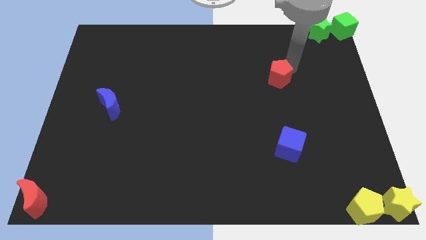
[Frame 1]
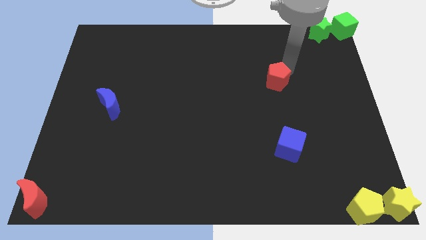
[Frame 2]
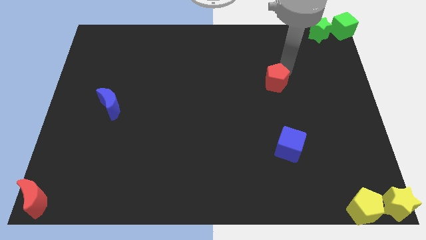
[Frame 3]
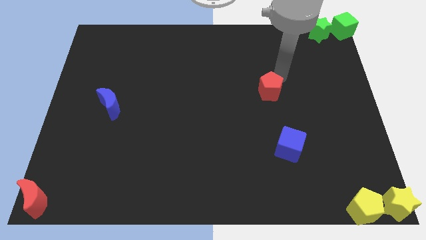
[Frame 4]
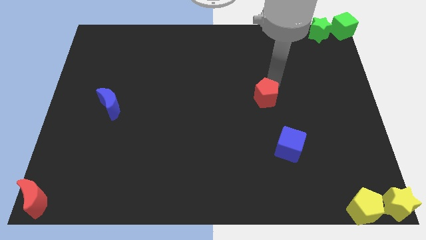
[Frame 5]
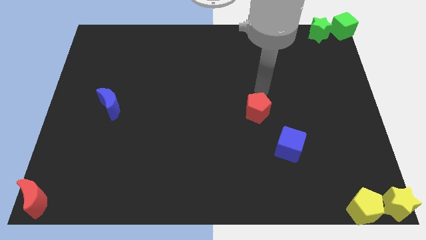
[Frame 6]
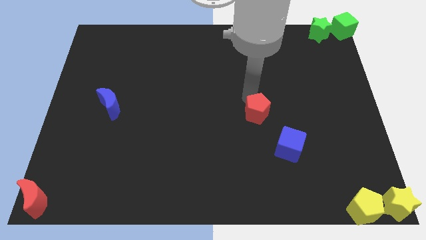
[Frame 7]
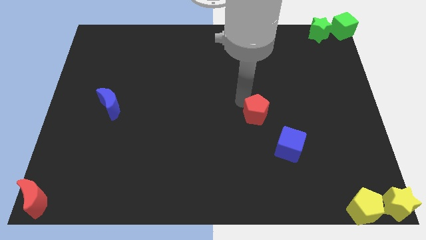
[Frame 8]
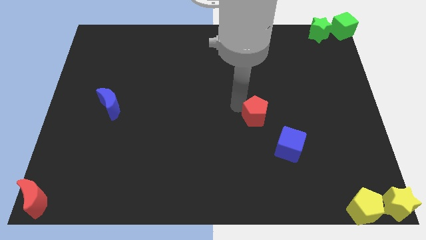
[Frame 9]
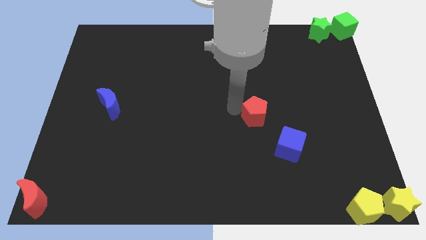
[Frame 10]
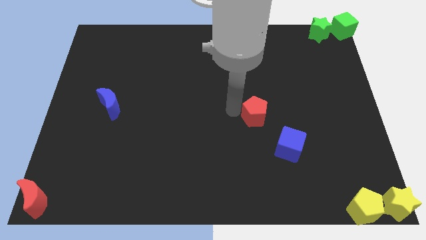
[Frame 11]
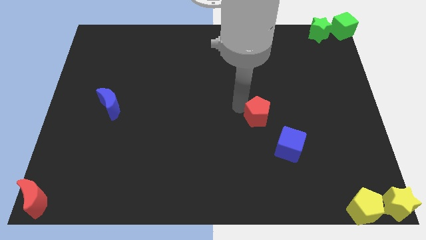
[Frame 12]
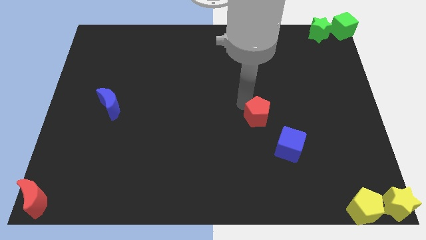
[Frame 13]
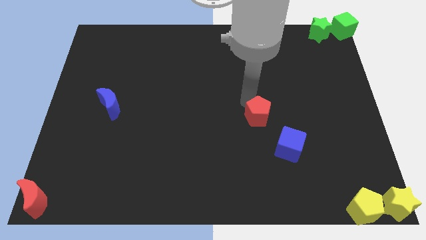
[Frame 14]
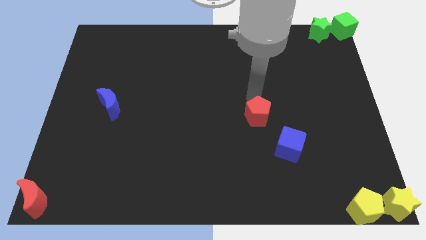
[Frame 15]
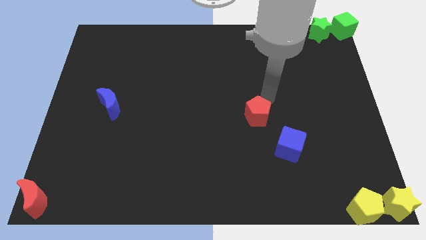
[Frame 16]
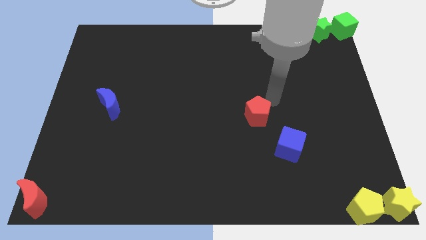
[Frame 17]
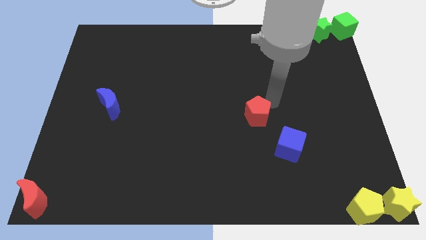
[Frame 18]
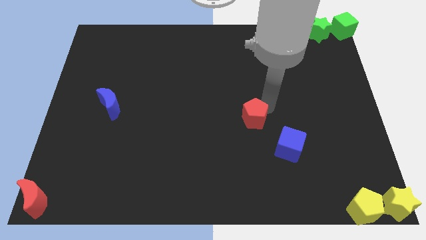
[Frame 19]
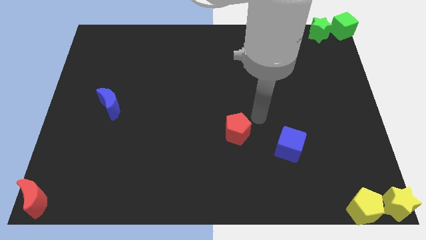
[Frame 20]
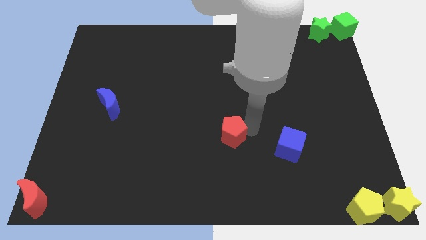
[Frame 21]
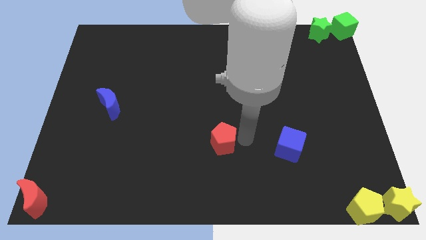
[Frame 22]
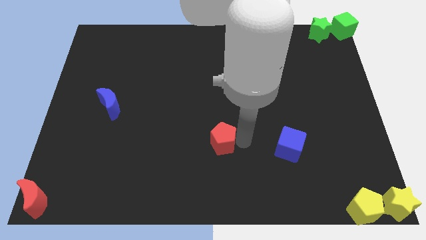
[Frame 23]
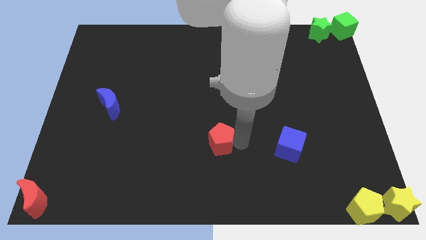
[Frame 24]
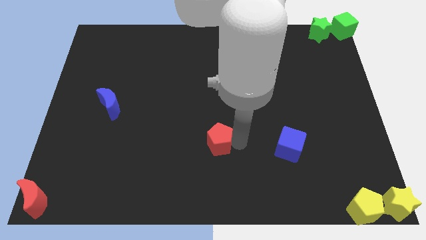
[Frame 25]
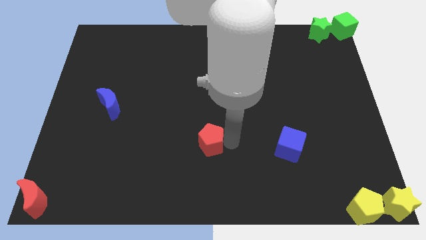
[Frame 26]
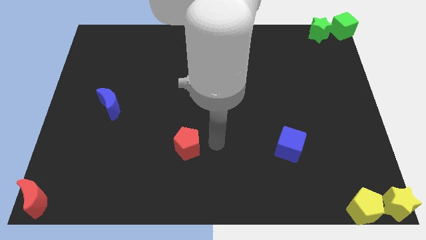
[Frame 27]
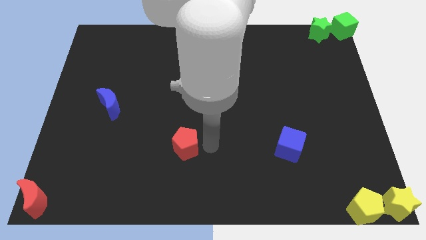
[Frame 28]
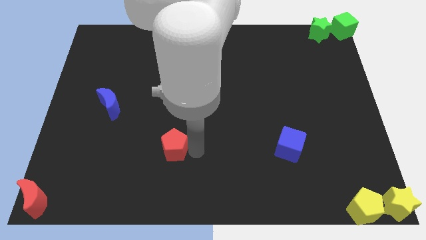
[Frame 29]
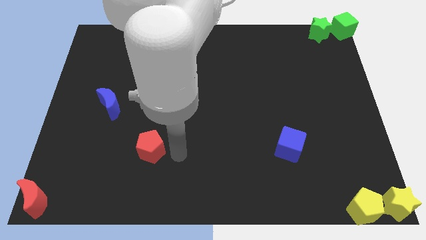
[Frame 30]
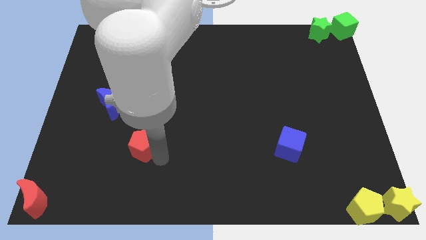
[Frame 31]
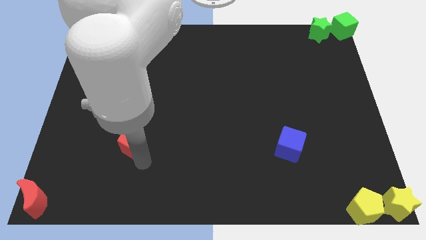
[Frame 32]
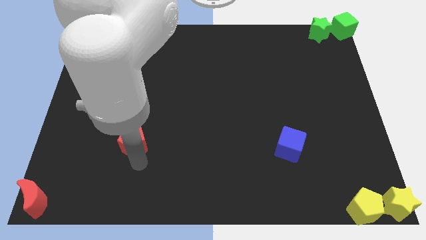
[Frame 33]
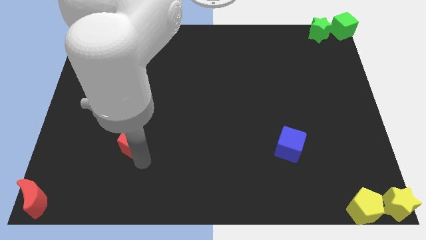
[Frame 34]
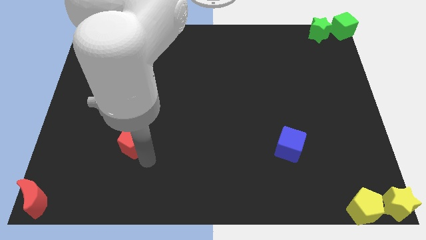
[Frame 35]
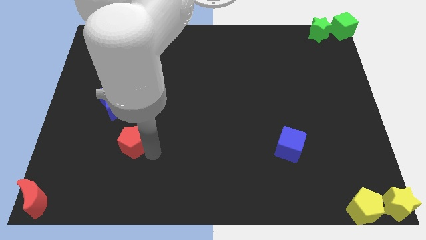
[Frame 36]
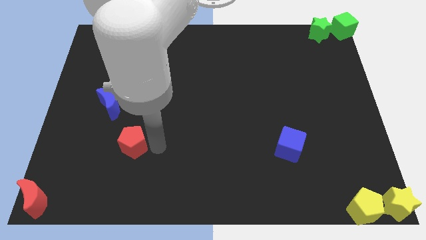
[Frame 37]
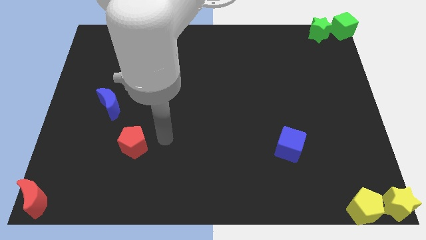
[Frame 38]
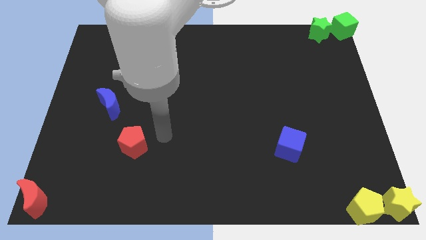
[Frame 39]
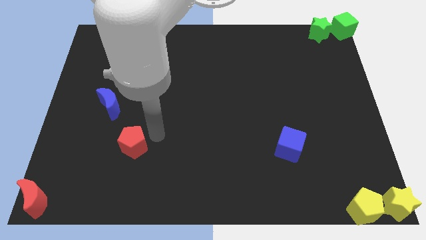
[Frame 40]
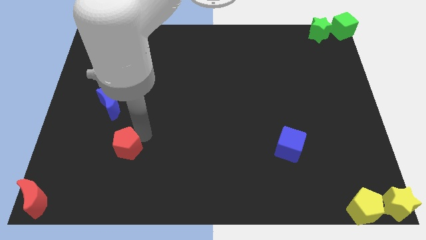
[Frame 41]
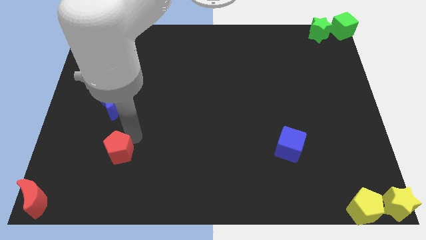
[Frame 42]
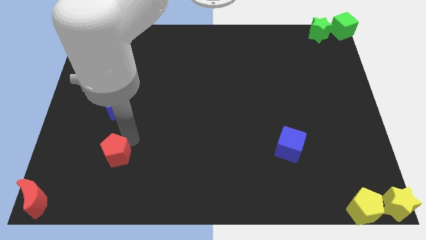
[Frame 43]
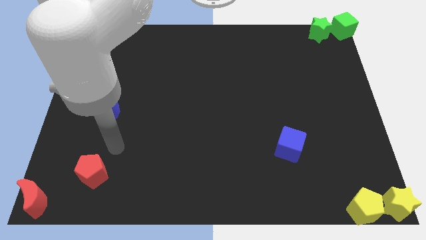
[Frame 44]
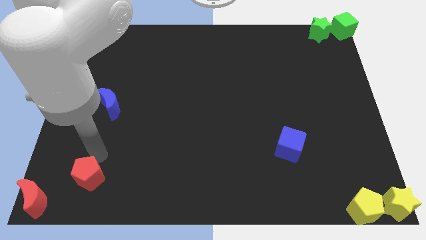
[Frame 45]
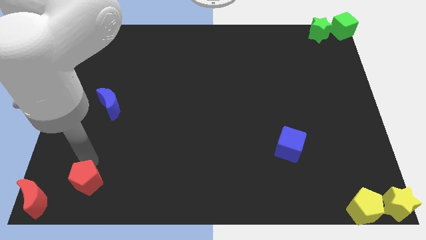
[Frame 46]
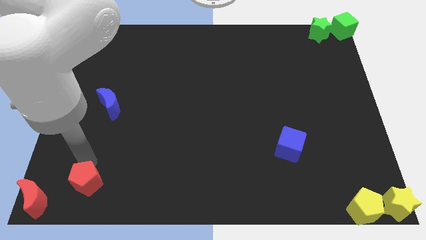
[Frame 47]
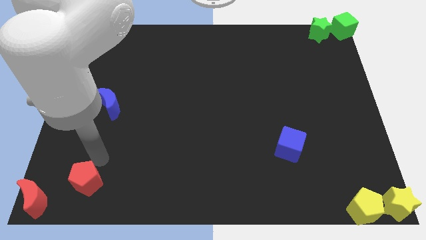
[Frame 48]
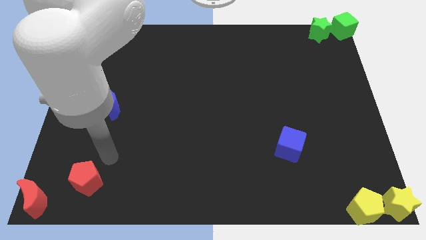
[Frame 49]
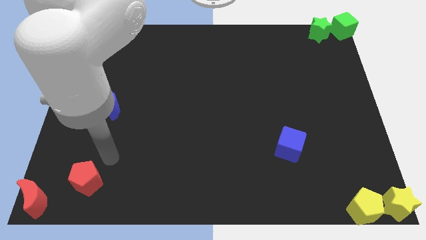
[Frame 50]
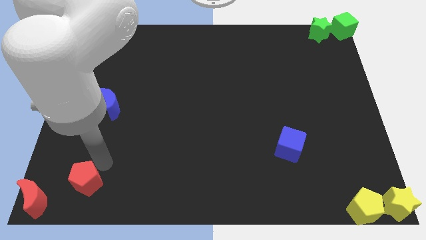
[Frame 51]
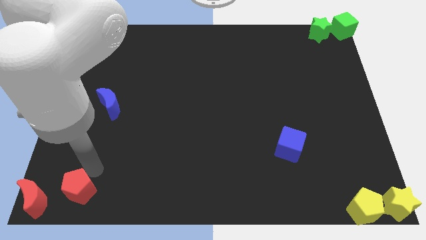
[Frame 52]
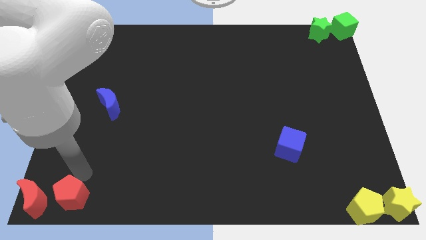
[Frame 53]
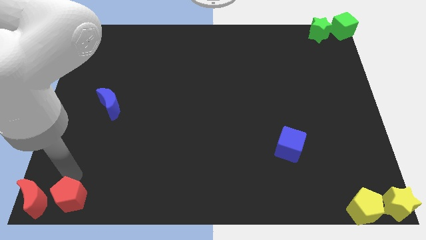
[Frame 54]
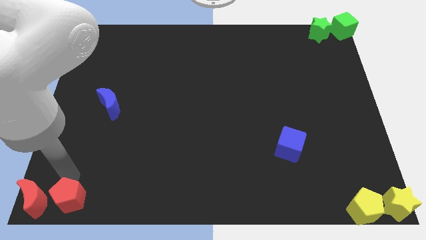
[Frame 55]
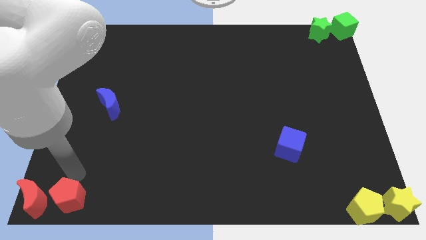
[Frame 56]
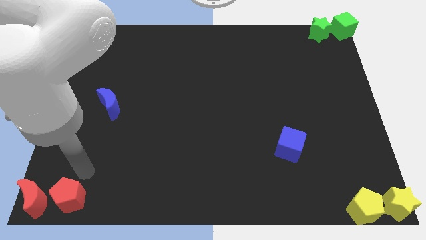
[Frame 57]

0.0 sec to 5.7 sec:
move the red pentagon right to the red crescent

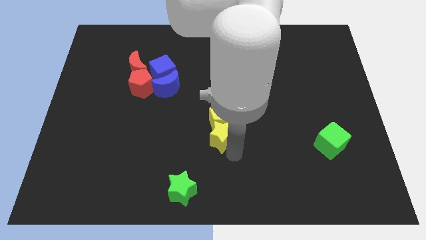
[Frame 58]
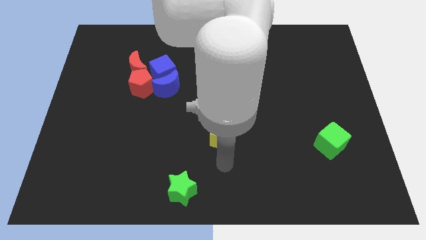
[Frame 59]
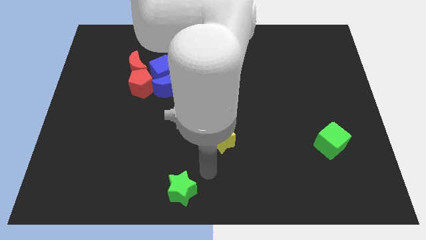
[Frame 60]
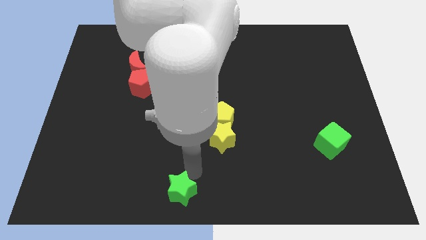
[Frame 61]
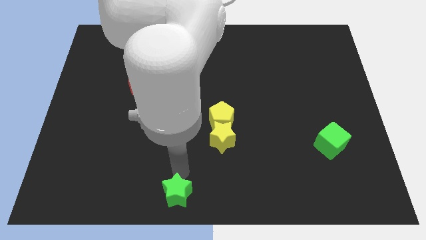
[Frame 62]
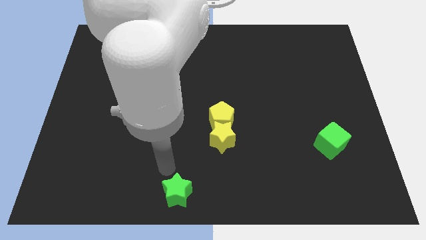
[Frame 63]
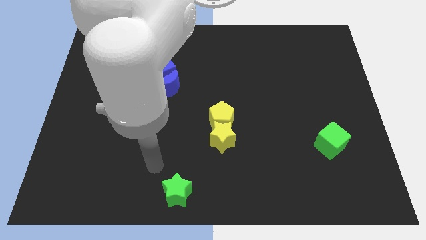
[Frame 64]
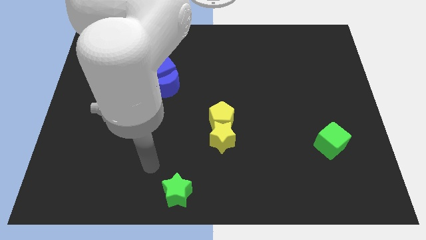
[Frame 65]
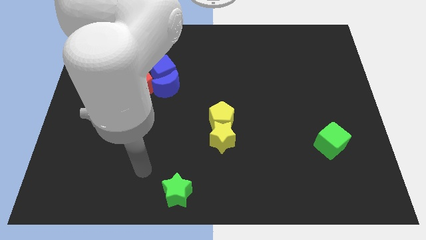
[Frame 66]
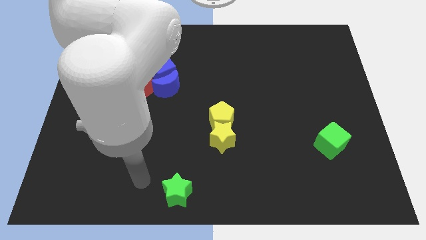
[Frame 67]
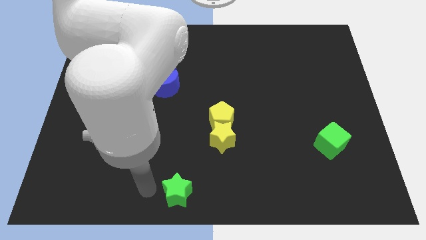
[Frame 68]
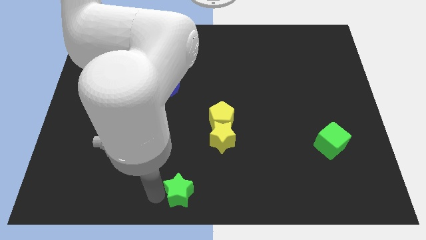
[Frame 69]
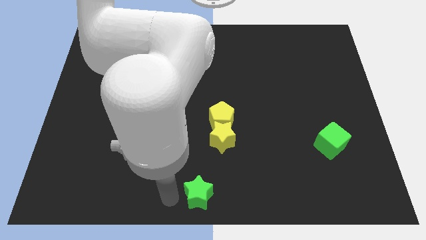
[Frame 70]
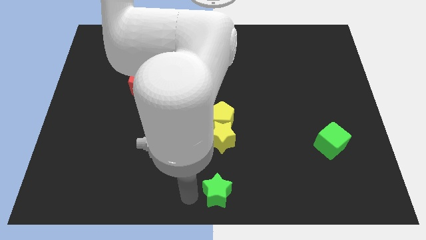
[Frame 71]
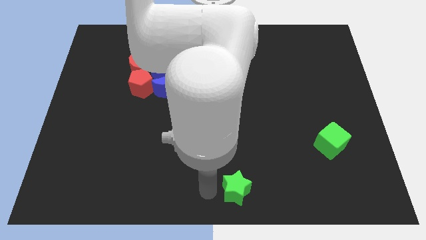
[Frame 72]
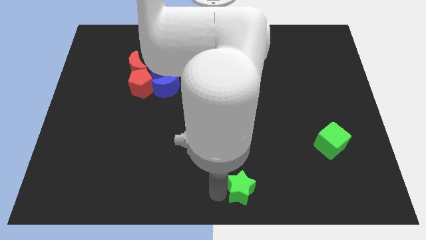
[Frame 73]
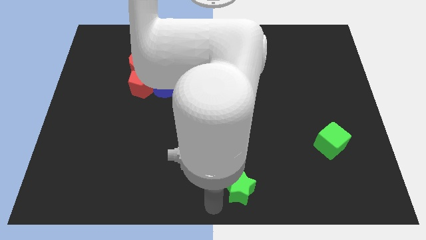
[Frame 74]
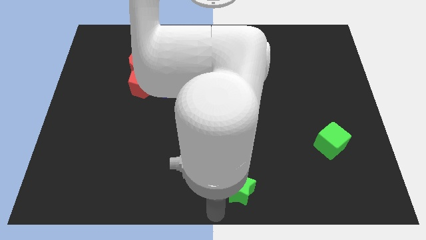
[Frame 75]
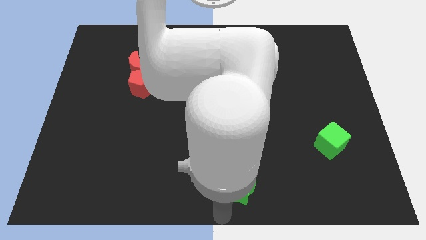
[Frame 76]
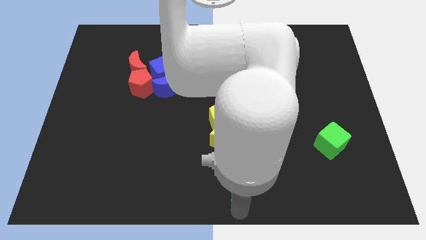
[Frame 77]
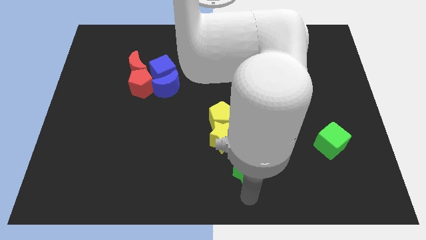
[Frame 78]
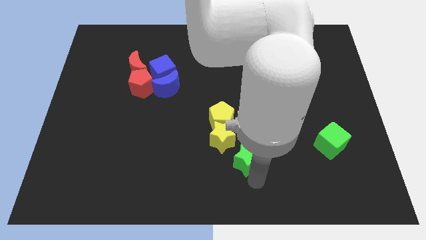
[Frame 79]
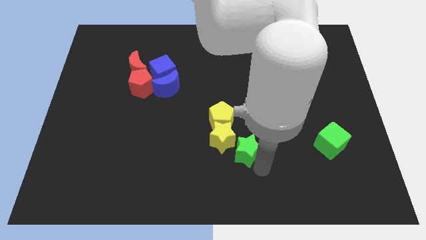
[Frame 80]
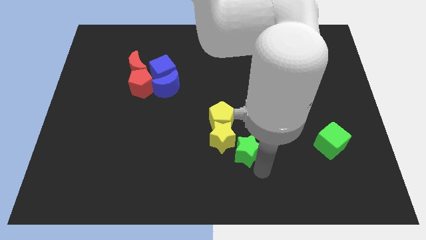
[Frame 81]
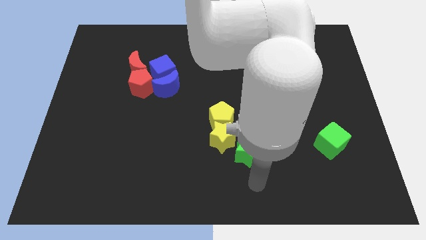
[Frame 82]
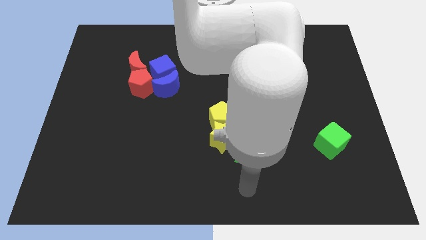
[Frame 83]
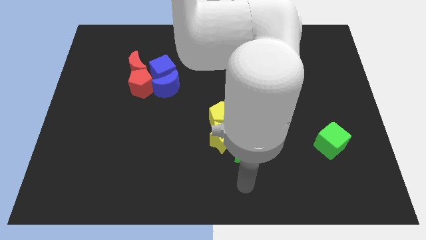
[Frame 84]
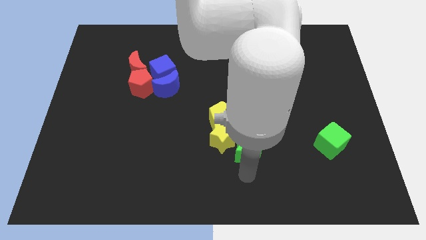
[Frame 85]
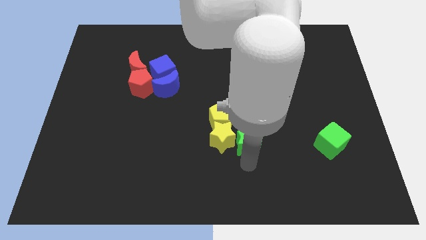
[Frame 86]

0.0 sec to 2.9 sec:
place the green star in between yellow star and green cube

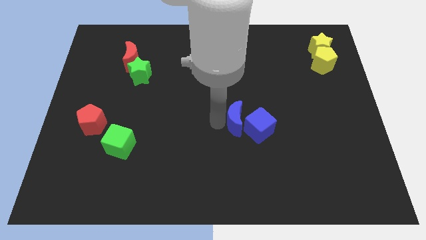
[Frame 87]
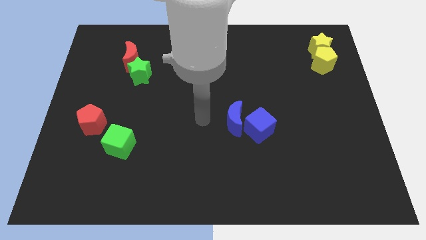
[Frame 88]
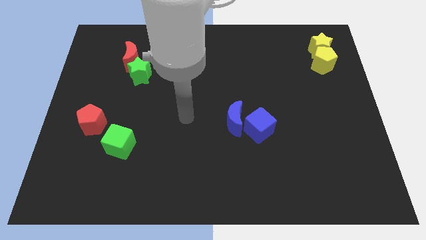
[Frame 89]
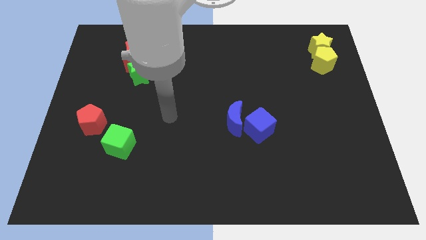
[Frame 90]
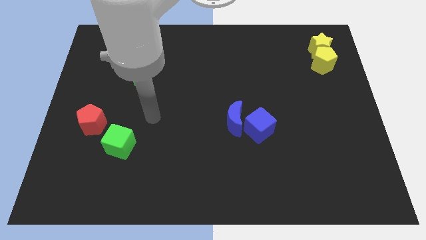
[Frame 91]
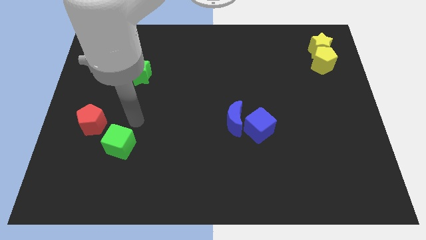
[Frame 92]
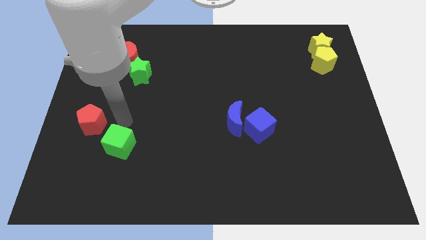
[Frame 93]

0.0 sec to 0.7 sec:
move your arm to the top of green cube
